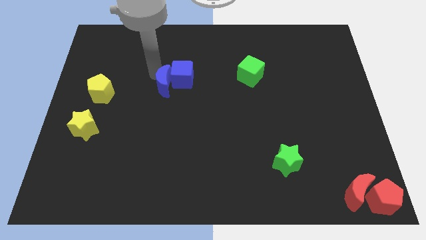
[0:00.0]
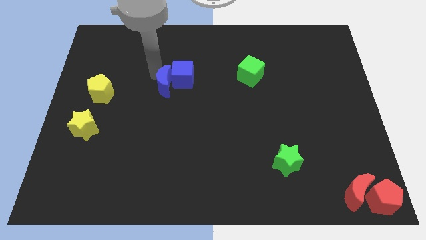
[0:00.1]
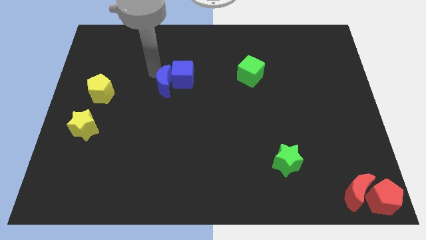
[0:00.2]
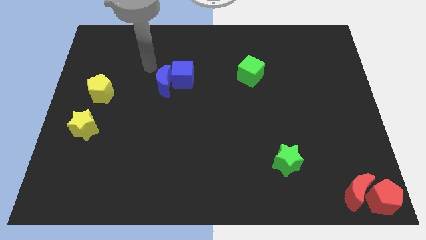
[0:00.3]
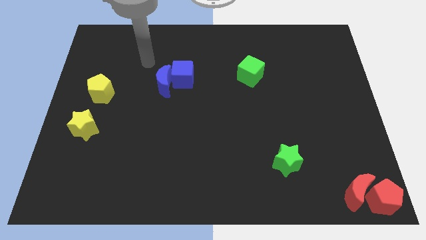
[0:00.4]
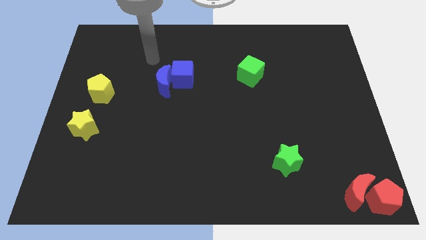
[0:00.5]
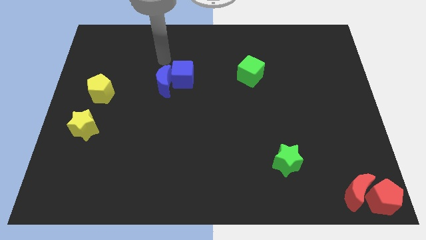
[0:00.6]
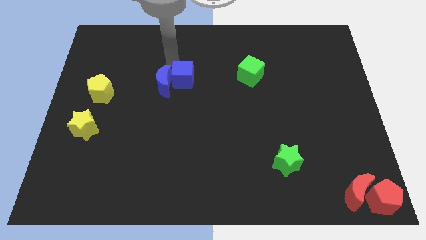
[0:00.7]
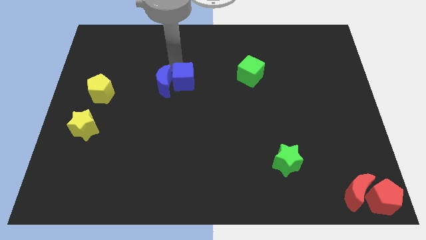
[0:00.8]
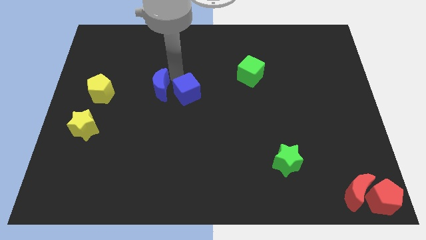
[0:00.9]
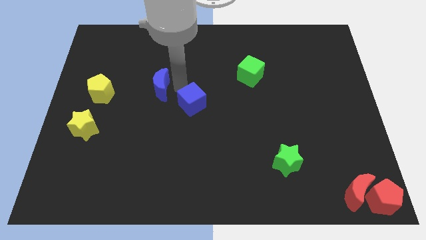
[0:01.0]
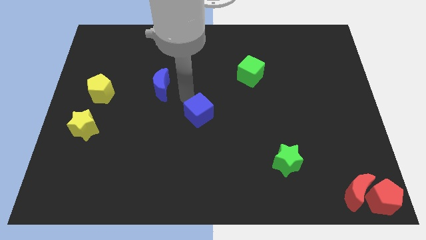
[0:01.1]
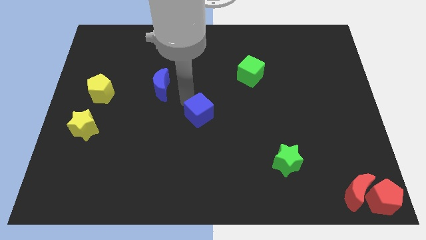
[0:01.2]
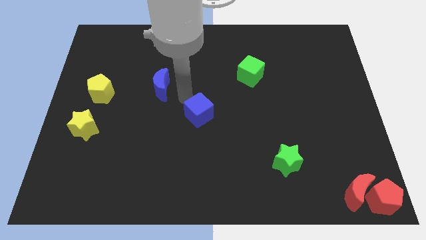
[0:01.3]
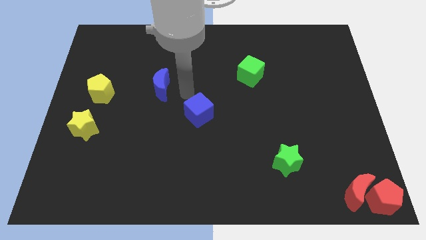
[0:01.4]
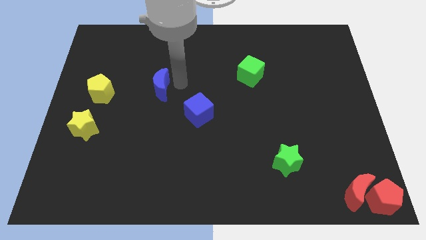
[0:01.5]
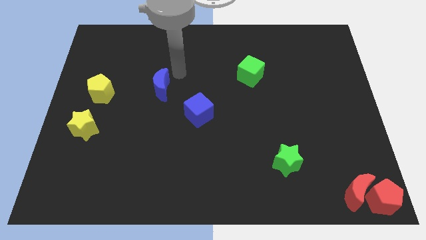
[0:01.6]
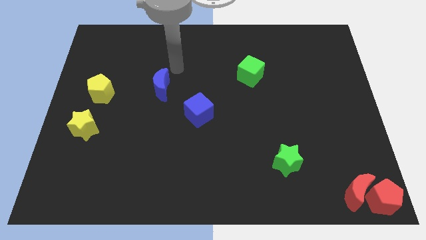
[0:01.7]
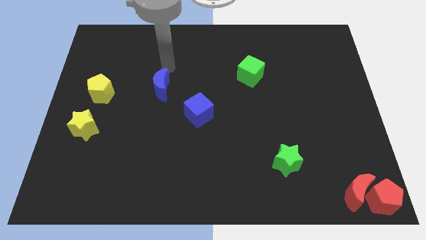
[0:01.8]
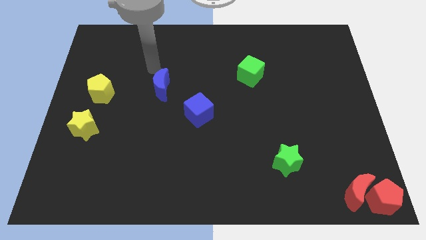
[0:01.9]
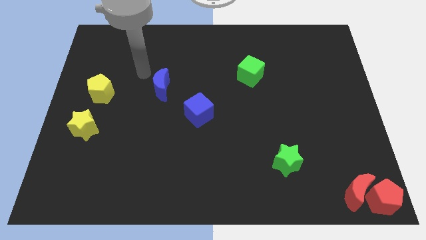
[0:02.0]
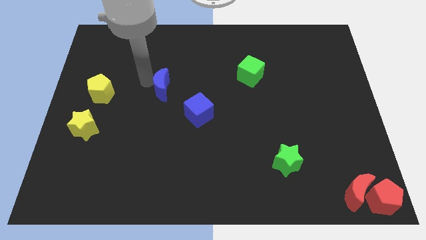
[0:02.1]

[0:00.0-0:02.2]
move the blue cube away from the right side of the blue crescent

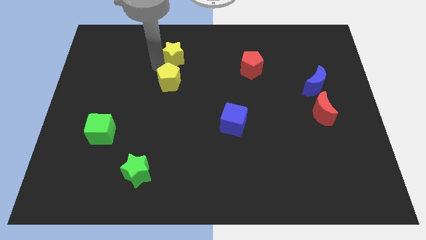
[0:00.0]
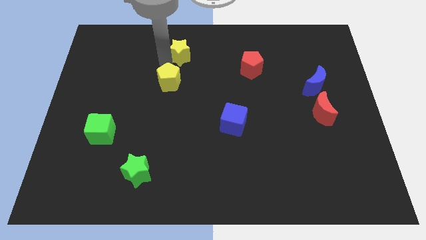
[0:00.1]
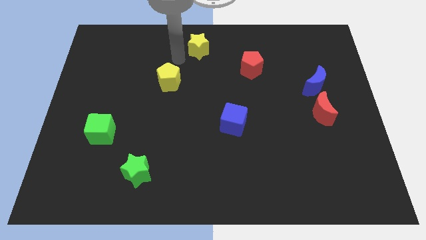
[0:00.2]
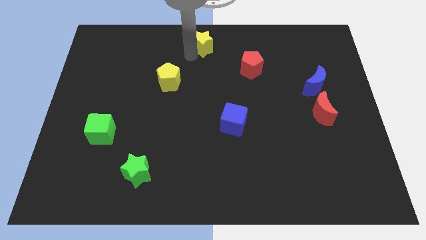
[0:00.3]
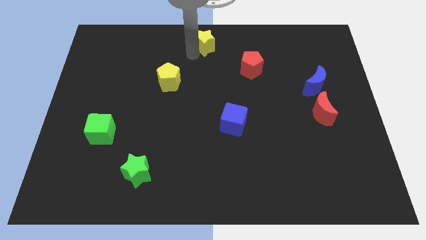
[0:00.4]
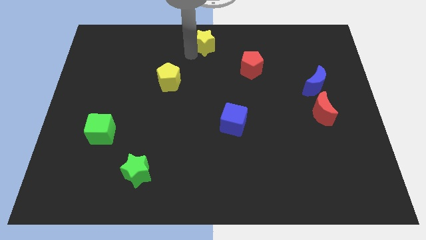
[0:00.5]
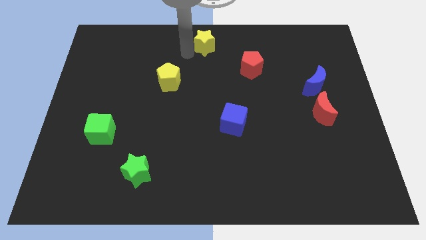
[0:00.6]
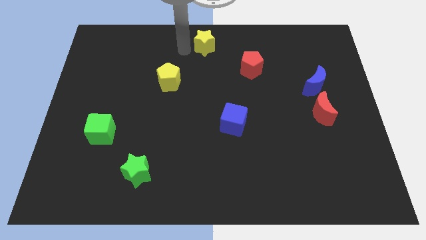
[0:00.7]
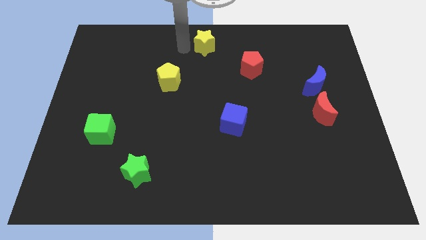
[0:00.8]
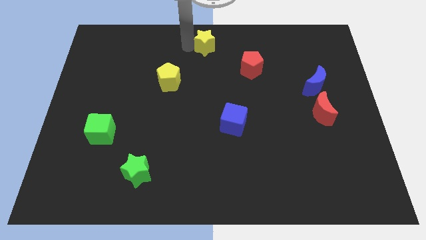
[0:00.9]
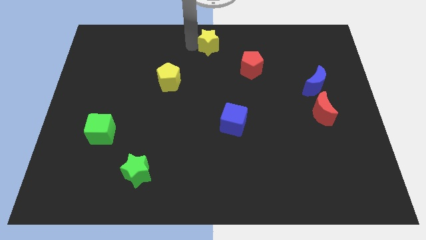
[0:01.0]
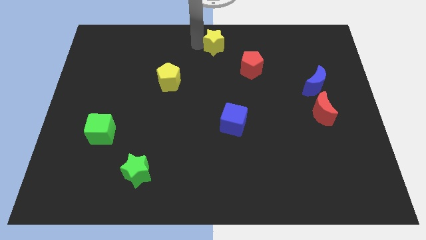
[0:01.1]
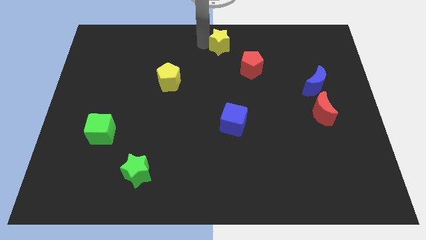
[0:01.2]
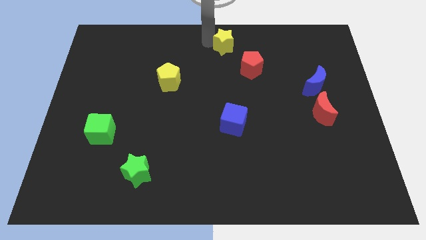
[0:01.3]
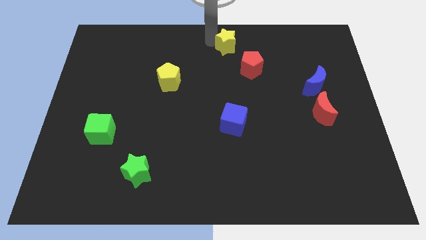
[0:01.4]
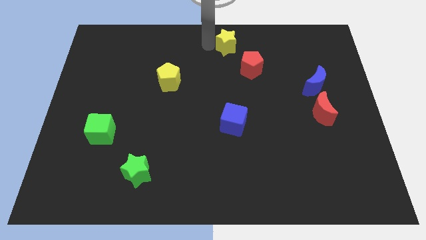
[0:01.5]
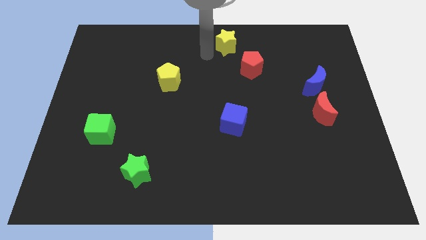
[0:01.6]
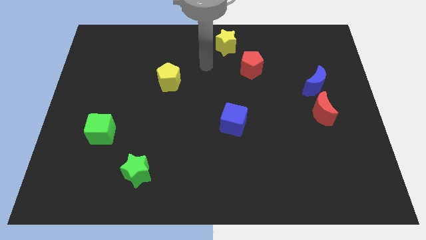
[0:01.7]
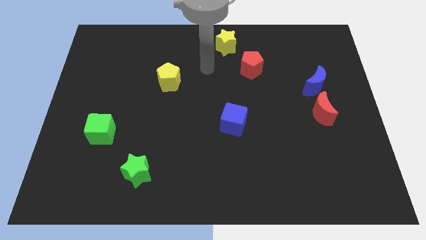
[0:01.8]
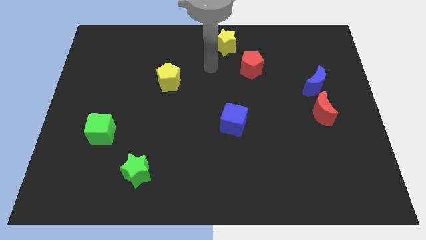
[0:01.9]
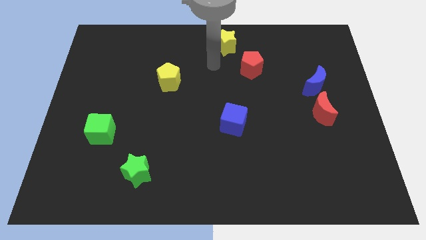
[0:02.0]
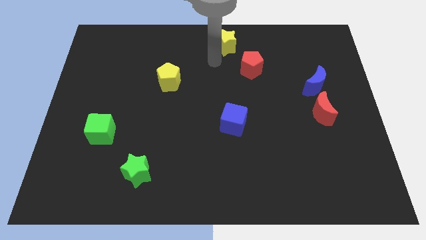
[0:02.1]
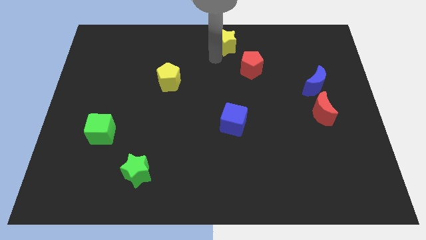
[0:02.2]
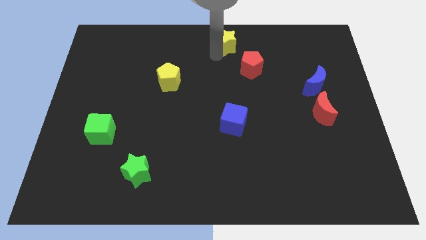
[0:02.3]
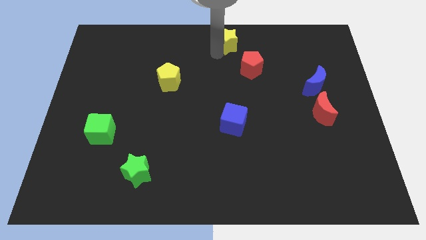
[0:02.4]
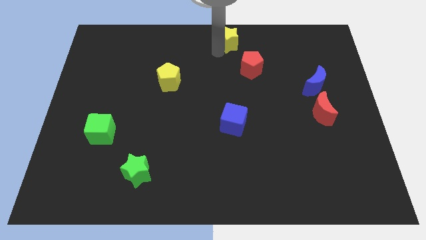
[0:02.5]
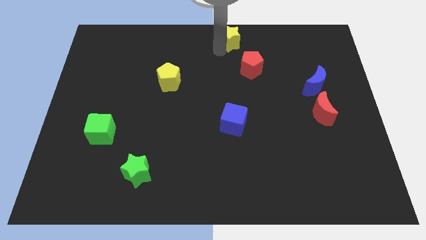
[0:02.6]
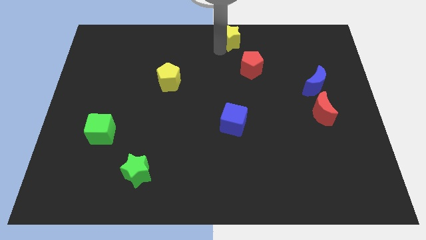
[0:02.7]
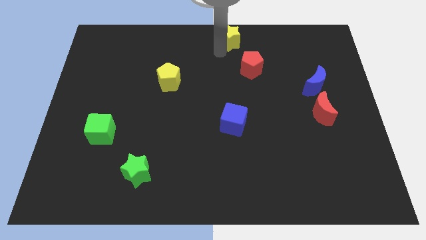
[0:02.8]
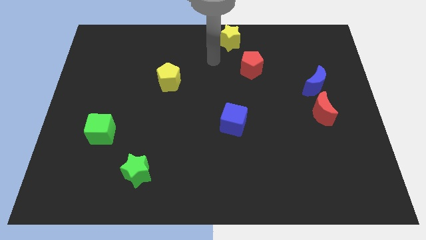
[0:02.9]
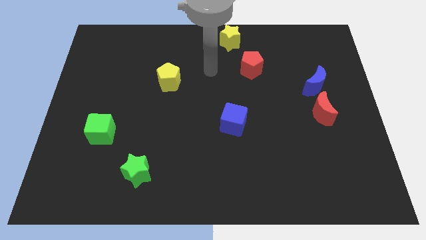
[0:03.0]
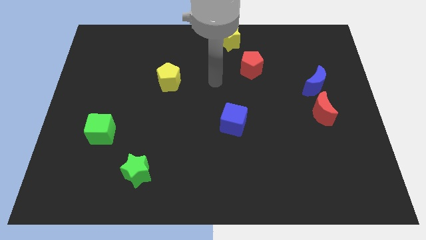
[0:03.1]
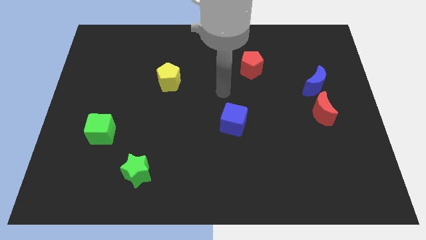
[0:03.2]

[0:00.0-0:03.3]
place the yellow star at the top center of the board

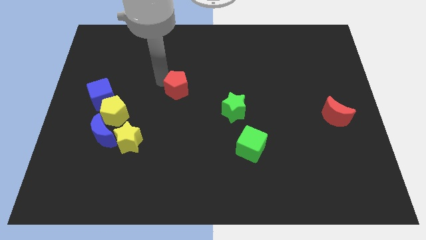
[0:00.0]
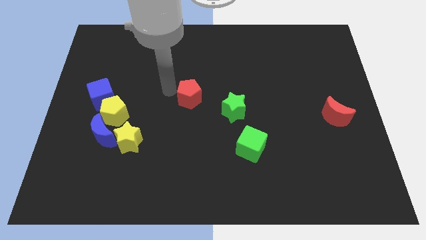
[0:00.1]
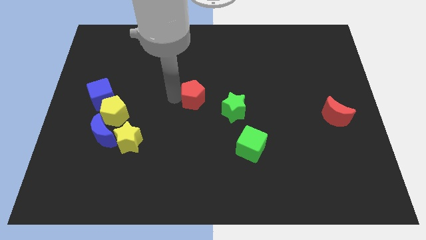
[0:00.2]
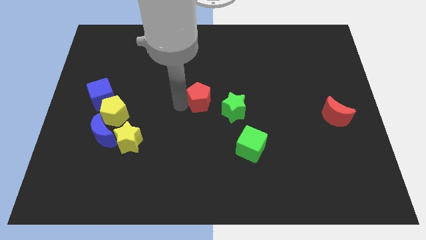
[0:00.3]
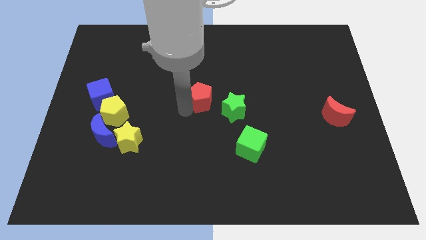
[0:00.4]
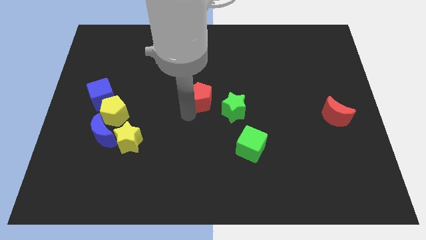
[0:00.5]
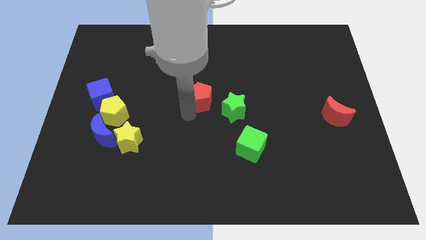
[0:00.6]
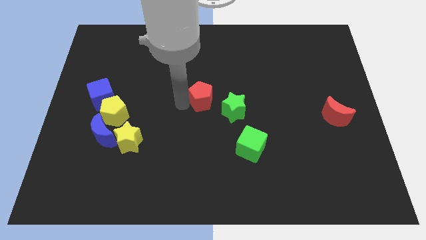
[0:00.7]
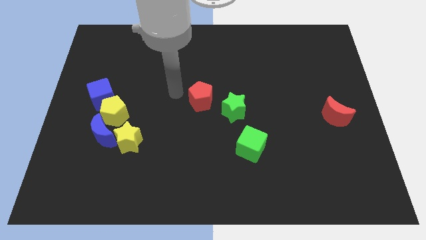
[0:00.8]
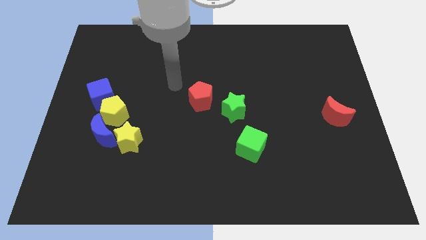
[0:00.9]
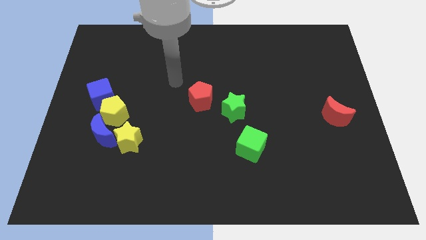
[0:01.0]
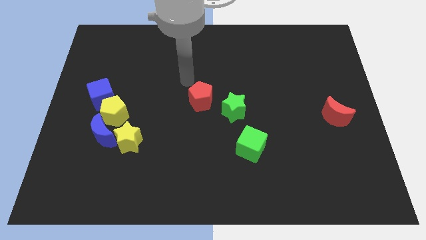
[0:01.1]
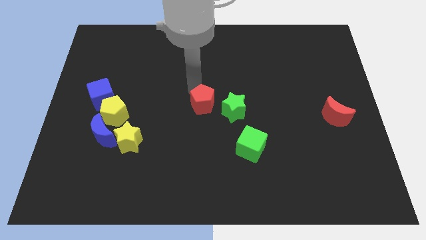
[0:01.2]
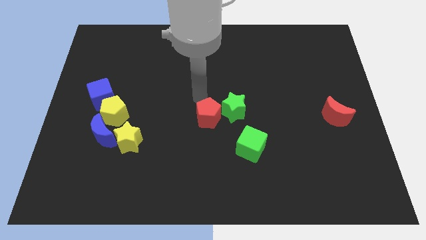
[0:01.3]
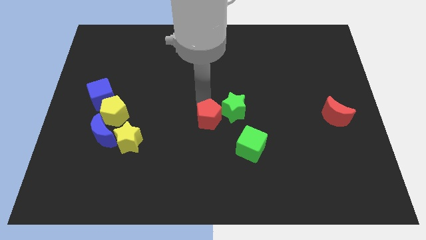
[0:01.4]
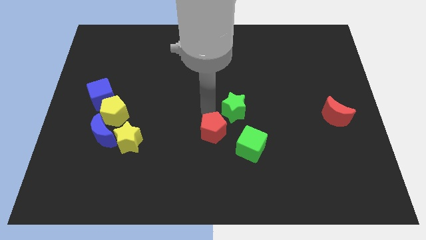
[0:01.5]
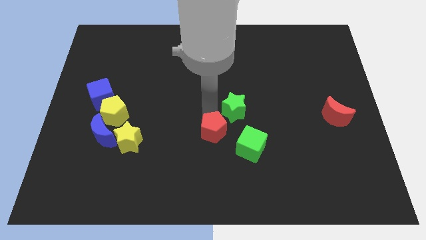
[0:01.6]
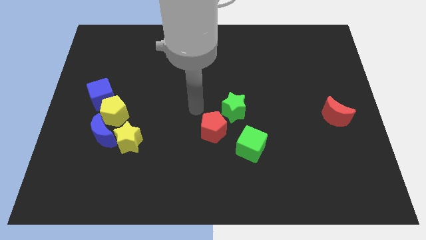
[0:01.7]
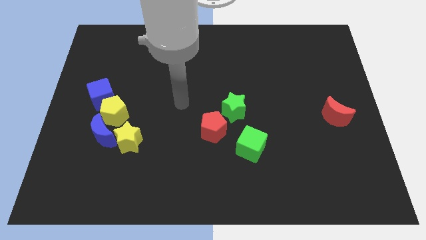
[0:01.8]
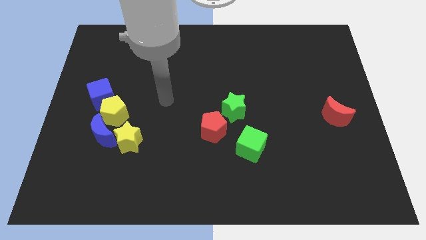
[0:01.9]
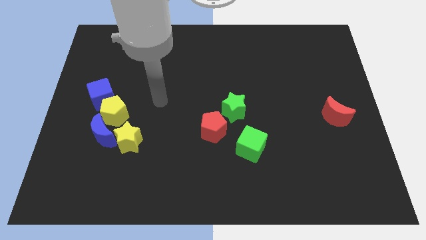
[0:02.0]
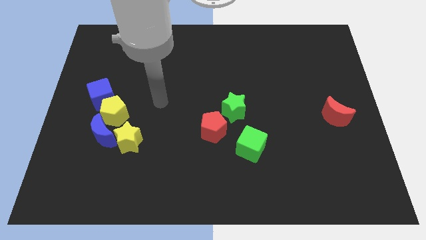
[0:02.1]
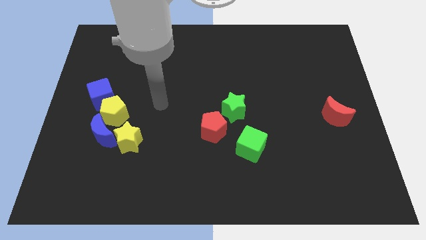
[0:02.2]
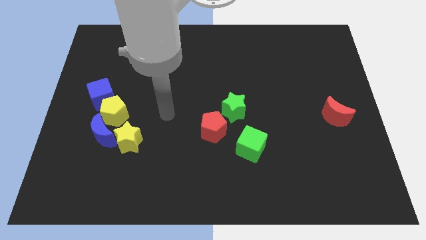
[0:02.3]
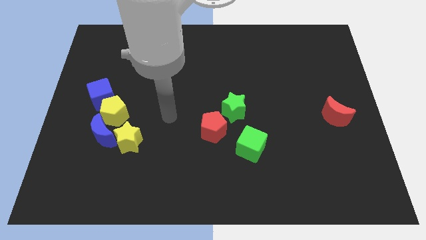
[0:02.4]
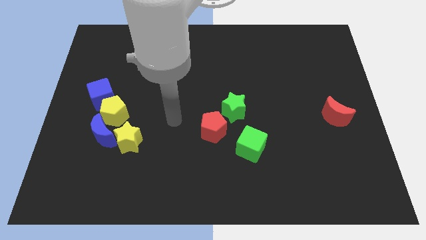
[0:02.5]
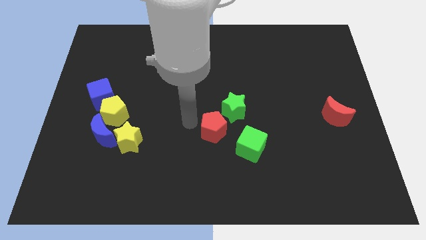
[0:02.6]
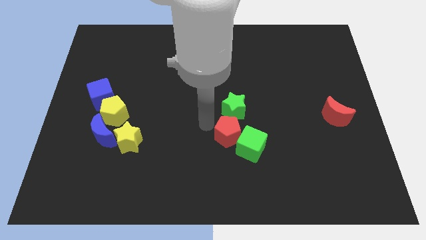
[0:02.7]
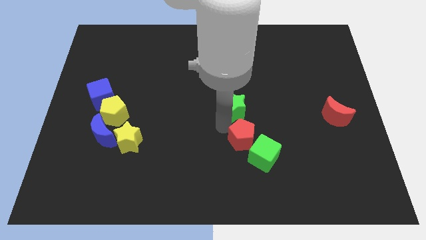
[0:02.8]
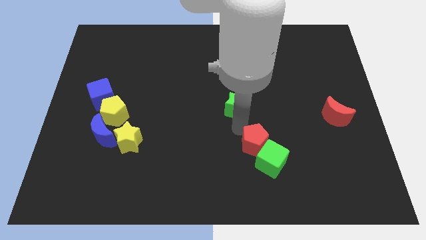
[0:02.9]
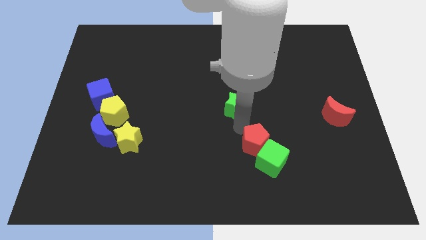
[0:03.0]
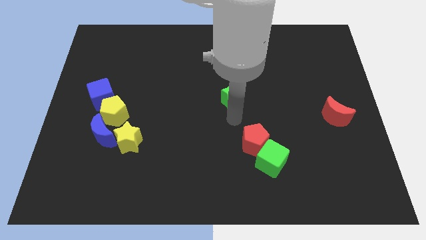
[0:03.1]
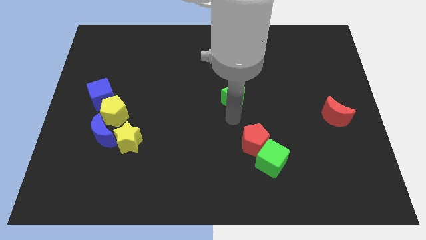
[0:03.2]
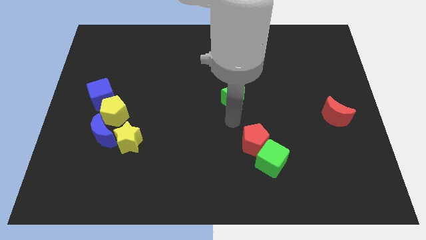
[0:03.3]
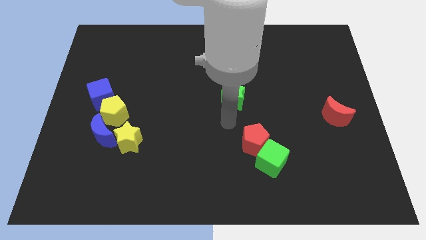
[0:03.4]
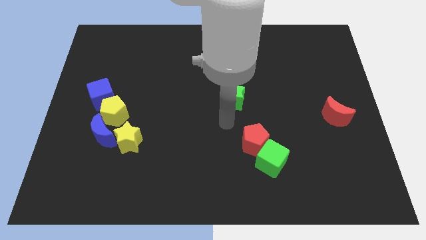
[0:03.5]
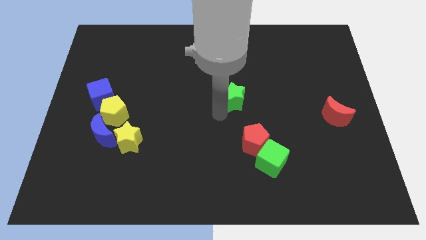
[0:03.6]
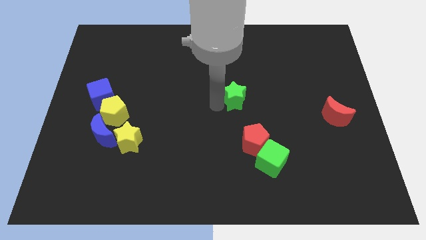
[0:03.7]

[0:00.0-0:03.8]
push the red pentagon into the green cube
